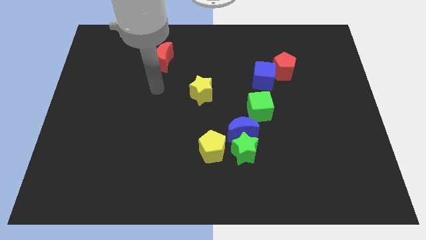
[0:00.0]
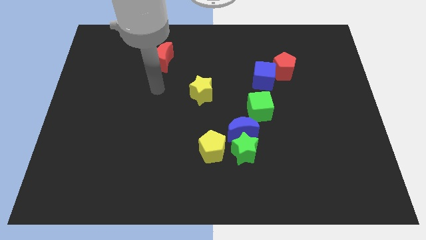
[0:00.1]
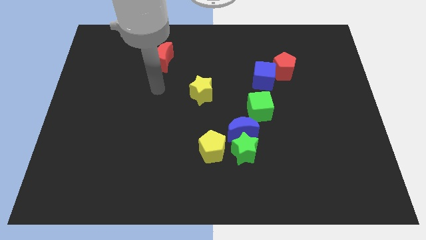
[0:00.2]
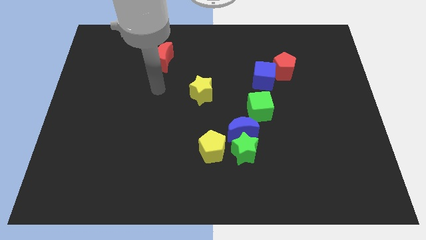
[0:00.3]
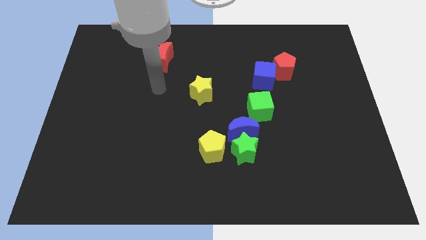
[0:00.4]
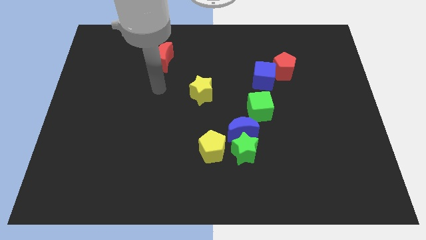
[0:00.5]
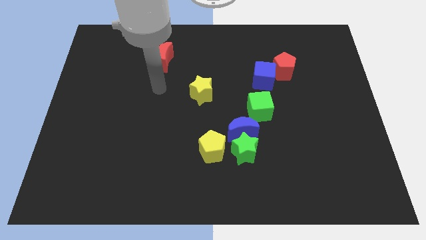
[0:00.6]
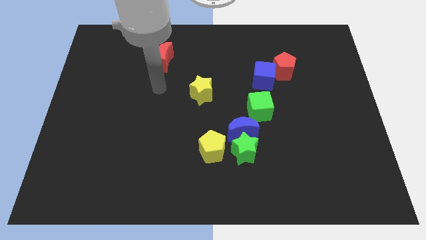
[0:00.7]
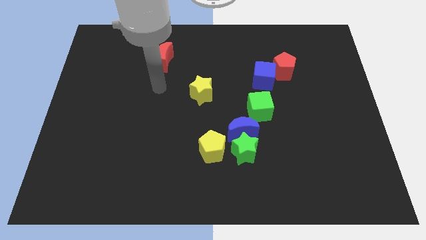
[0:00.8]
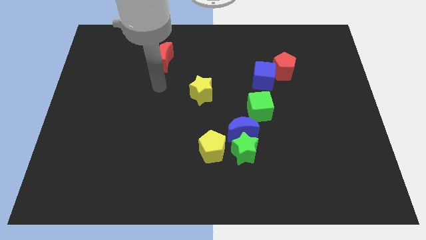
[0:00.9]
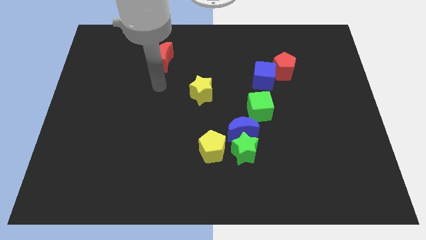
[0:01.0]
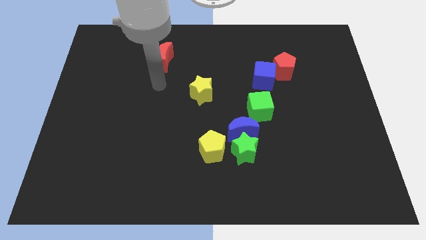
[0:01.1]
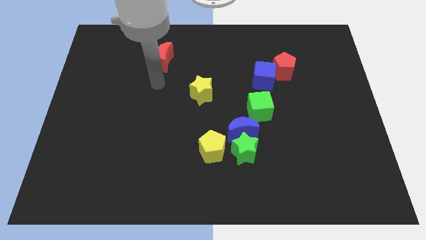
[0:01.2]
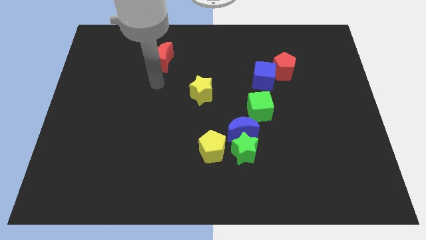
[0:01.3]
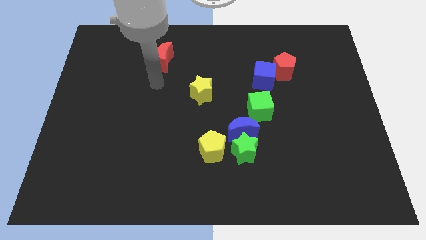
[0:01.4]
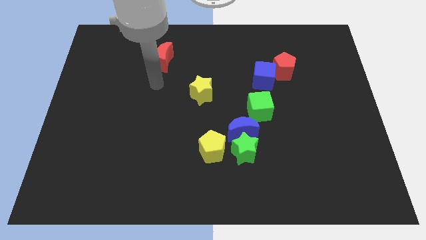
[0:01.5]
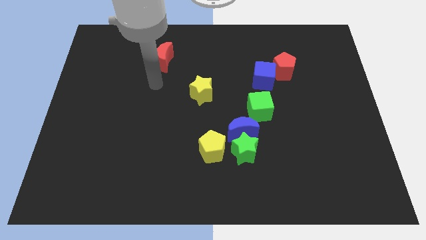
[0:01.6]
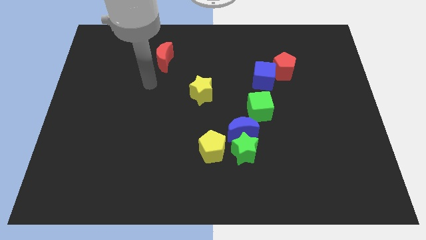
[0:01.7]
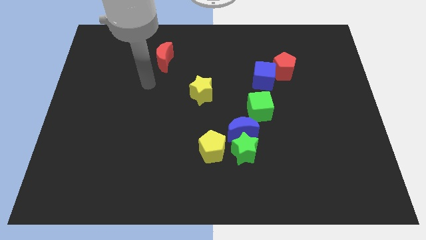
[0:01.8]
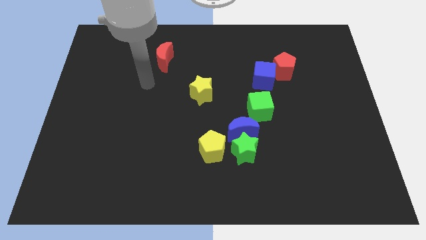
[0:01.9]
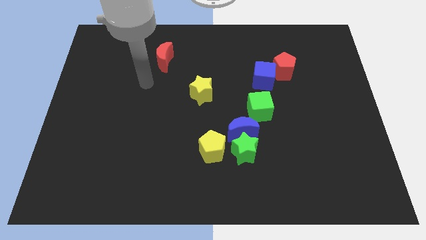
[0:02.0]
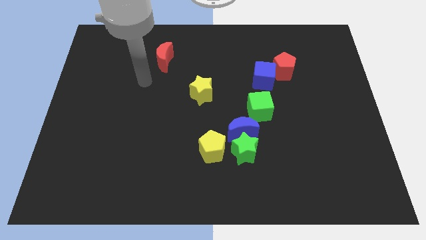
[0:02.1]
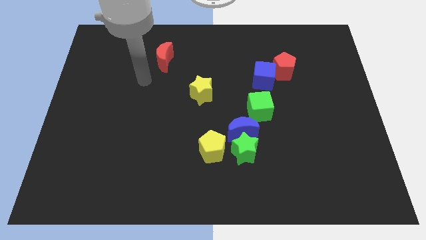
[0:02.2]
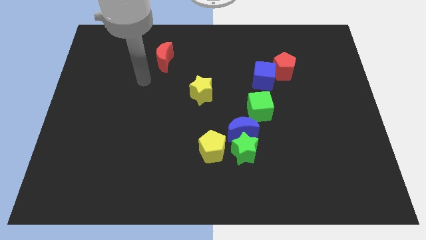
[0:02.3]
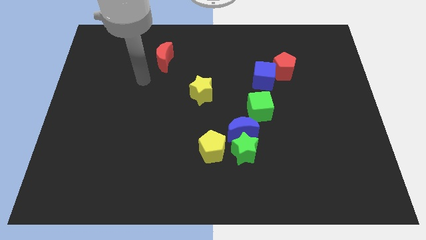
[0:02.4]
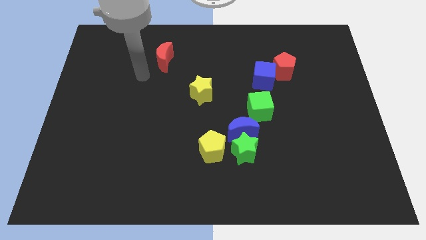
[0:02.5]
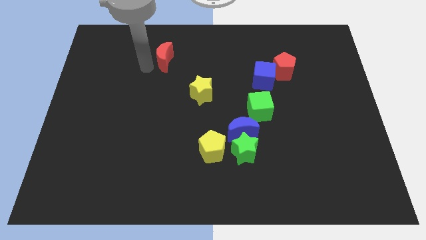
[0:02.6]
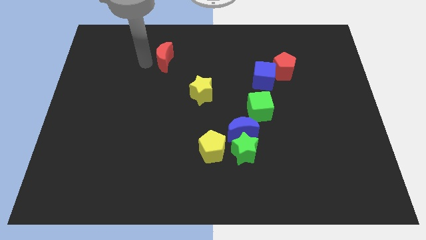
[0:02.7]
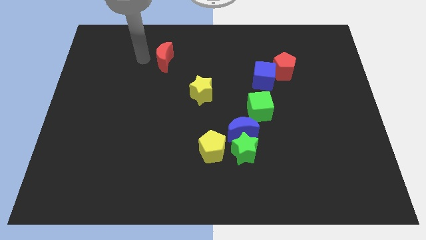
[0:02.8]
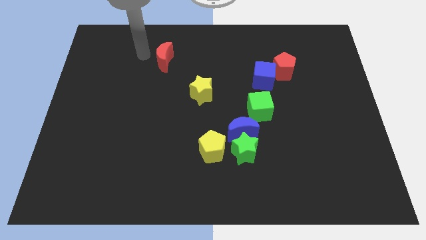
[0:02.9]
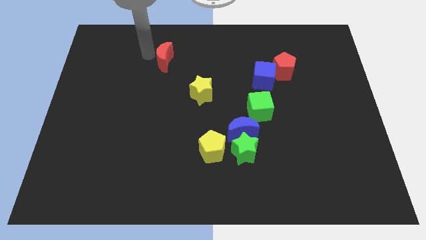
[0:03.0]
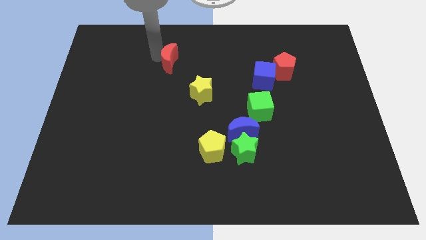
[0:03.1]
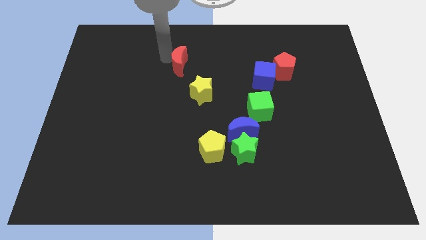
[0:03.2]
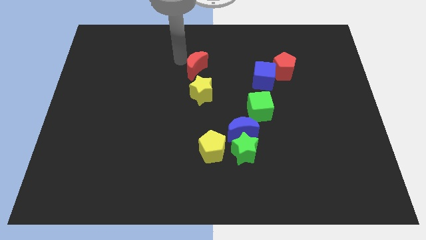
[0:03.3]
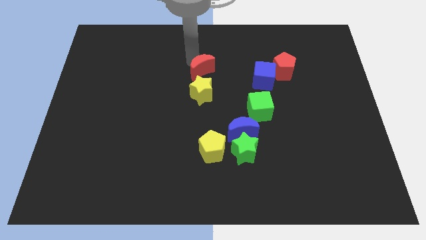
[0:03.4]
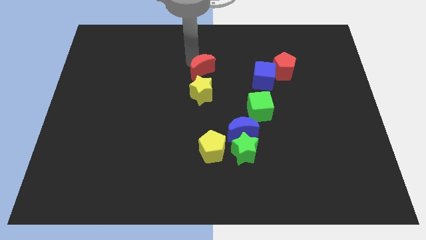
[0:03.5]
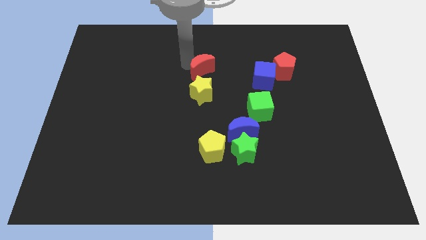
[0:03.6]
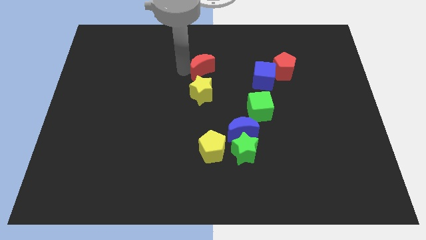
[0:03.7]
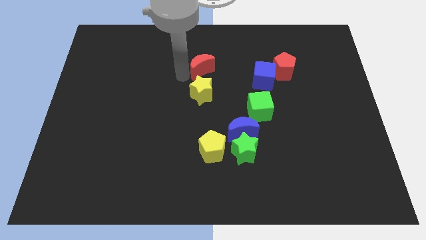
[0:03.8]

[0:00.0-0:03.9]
move the red crescent above to the yellow star

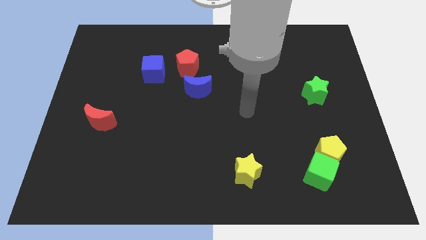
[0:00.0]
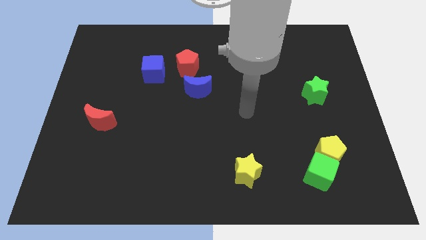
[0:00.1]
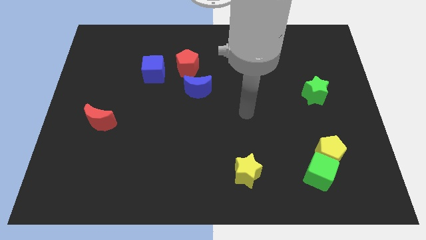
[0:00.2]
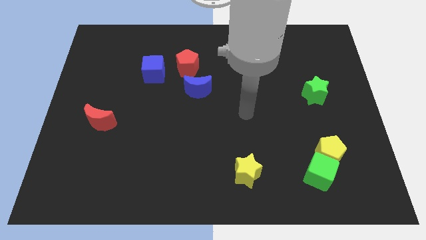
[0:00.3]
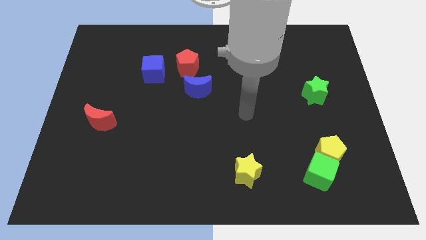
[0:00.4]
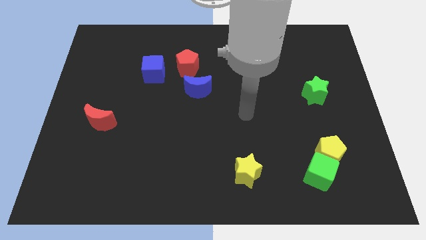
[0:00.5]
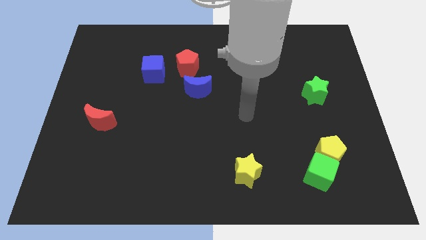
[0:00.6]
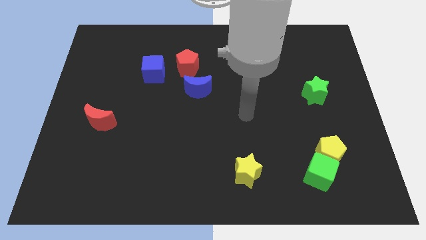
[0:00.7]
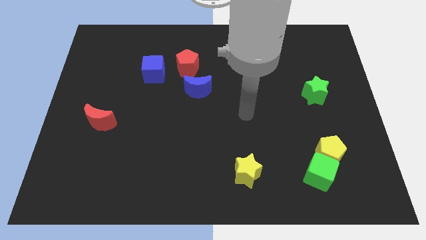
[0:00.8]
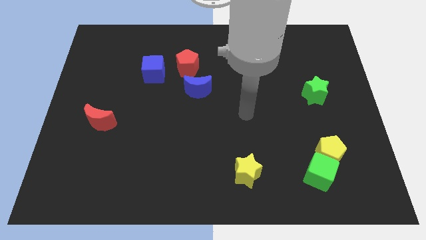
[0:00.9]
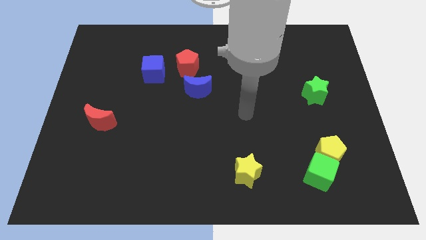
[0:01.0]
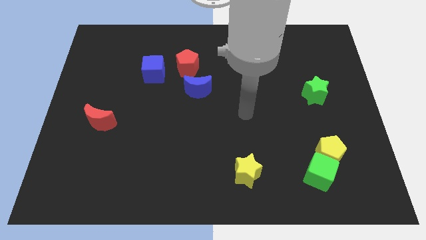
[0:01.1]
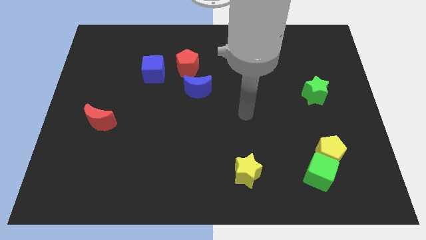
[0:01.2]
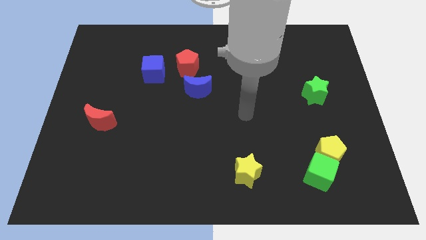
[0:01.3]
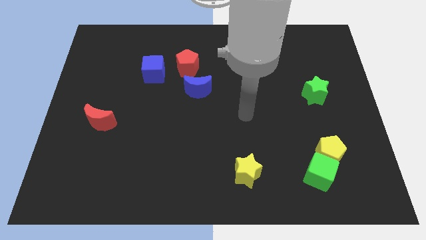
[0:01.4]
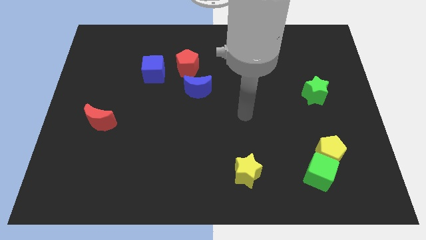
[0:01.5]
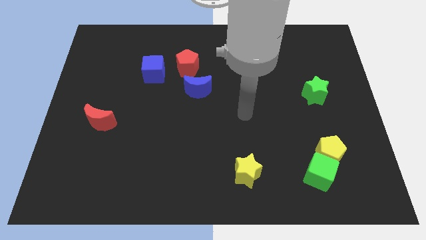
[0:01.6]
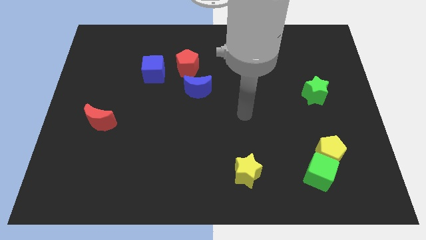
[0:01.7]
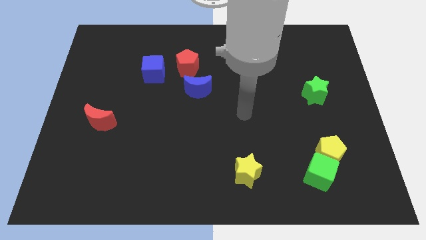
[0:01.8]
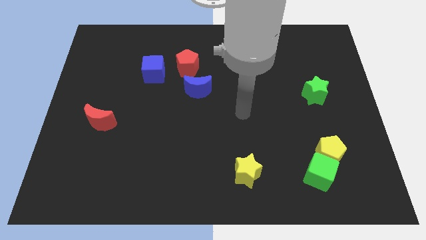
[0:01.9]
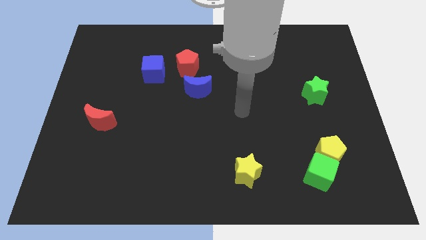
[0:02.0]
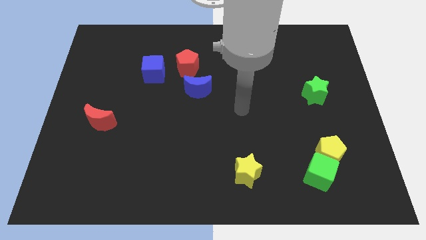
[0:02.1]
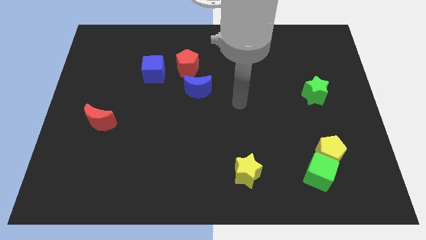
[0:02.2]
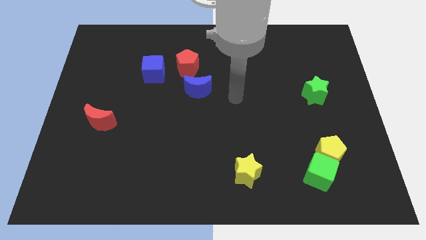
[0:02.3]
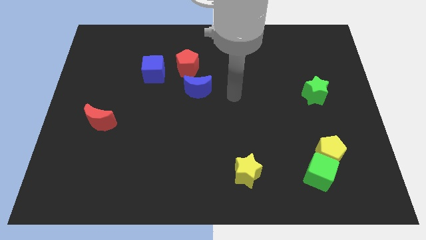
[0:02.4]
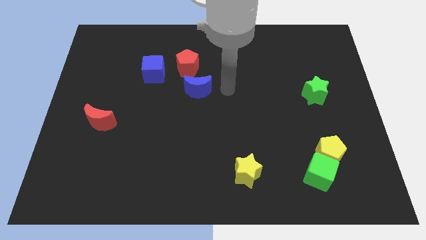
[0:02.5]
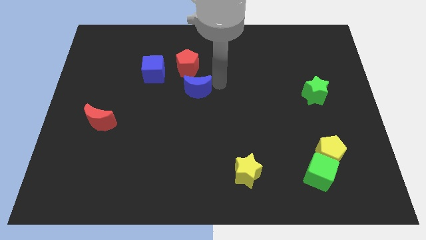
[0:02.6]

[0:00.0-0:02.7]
place your arm to the right of the blue moon

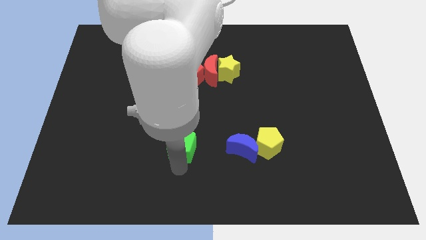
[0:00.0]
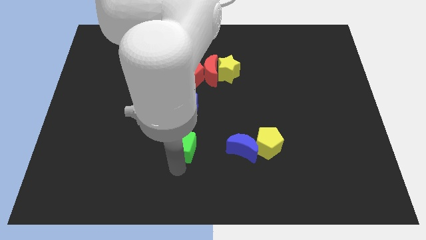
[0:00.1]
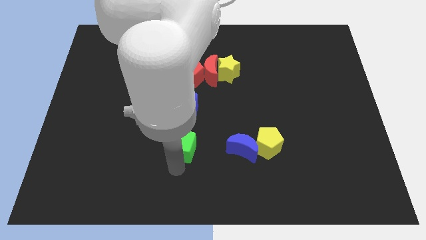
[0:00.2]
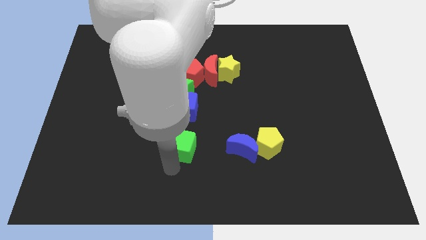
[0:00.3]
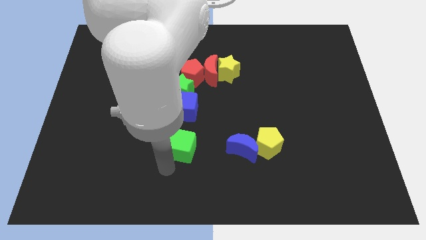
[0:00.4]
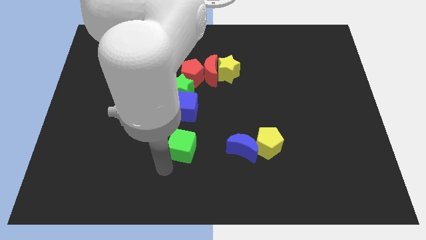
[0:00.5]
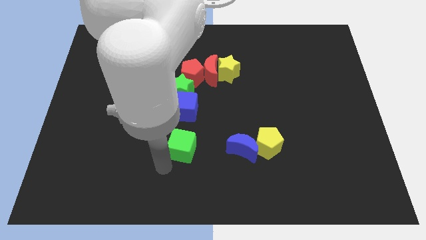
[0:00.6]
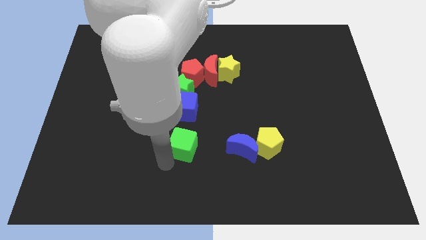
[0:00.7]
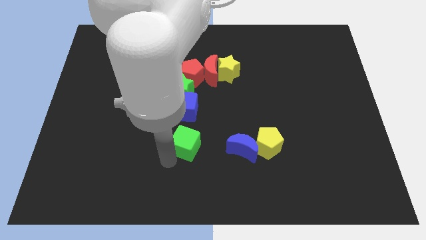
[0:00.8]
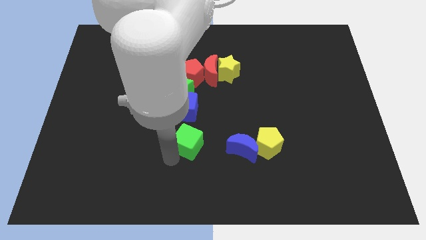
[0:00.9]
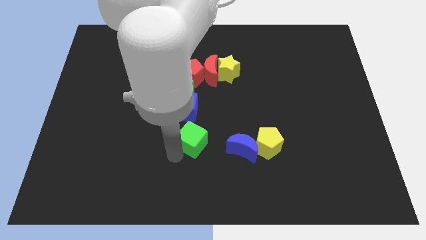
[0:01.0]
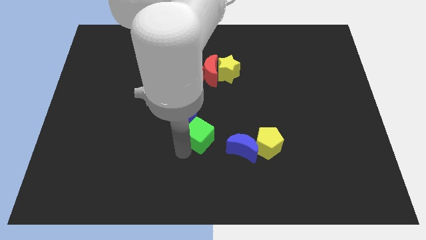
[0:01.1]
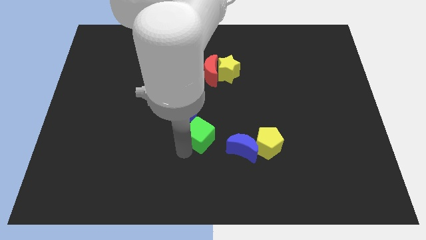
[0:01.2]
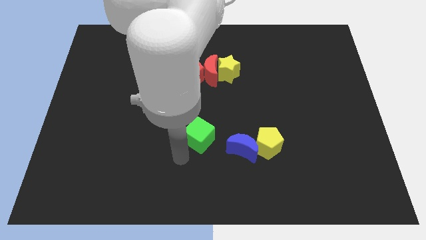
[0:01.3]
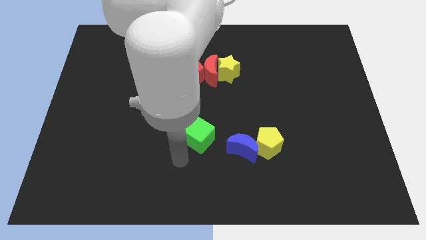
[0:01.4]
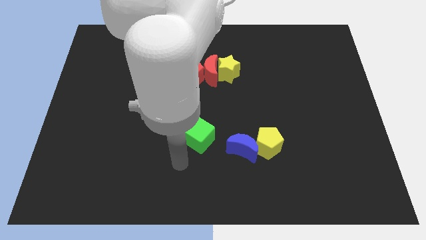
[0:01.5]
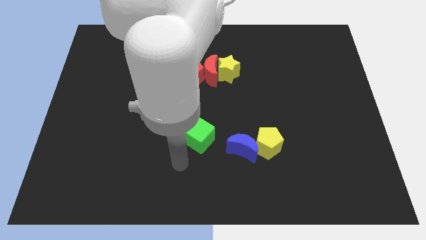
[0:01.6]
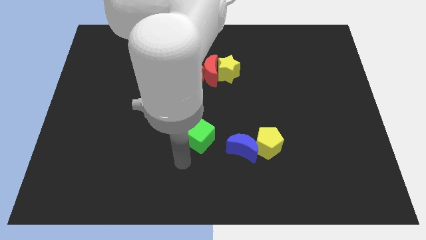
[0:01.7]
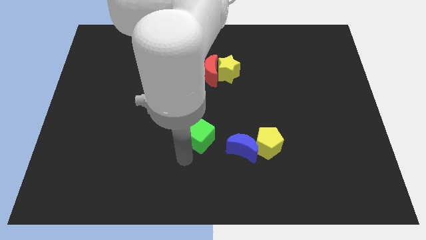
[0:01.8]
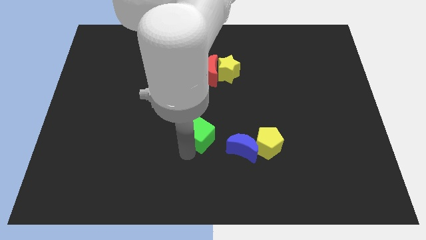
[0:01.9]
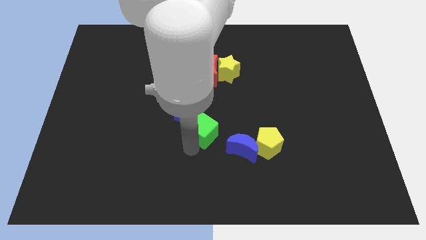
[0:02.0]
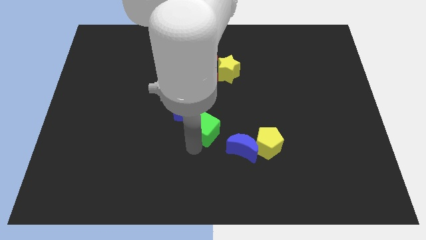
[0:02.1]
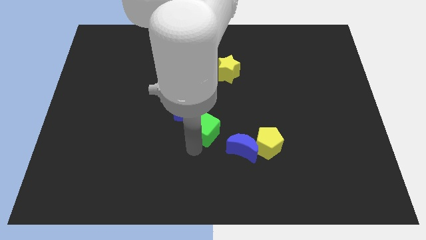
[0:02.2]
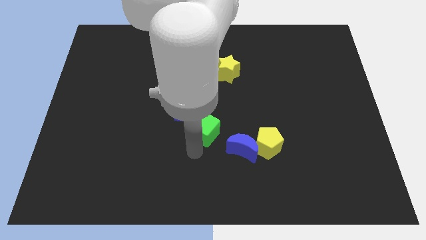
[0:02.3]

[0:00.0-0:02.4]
place the green cube in between blue cube and blue moon
